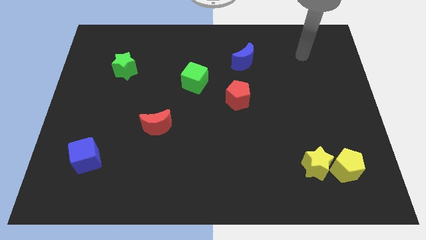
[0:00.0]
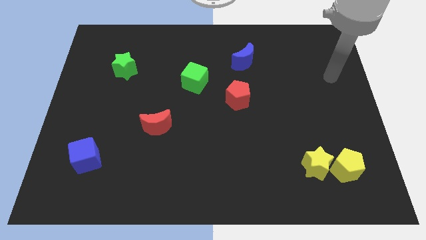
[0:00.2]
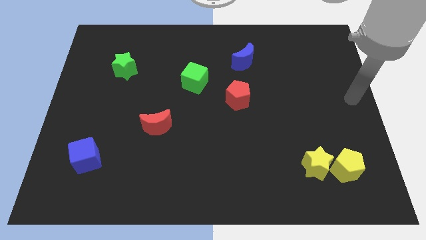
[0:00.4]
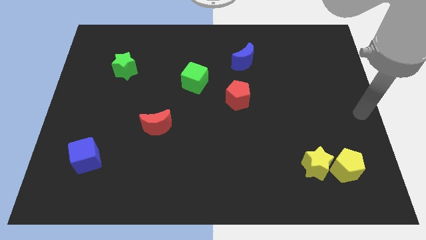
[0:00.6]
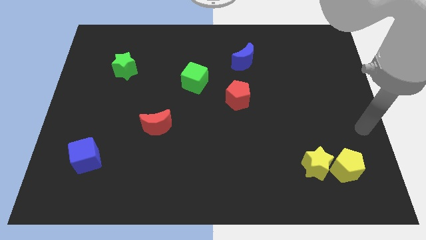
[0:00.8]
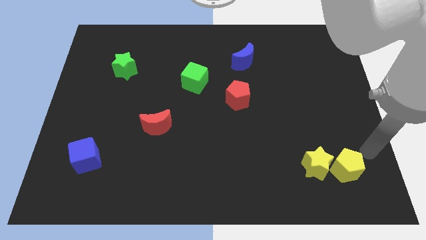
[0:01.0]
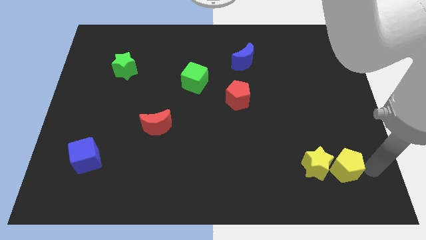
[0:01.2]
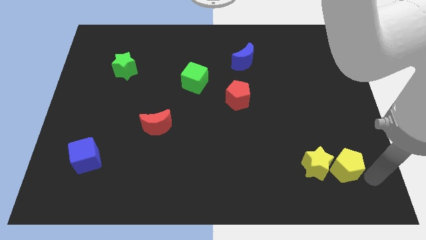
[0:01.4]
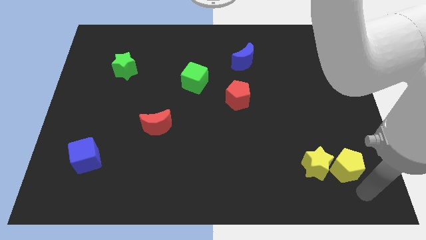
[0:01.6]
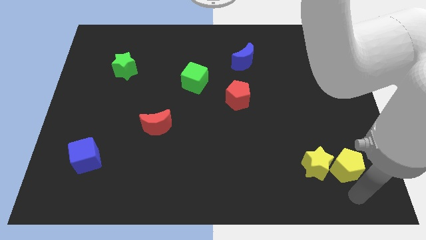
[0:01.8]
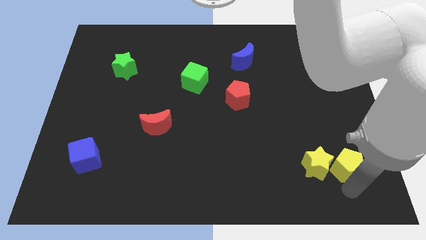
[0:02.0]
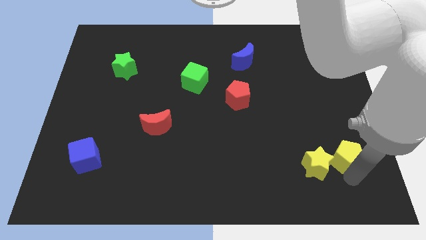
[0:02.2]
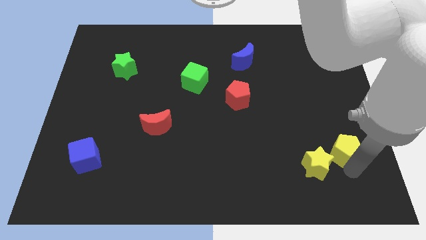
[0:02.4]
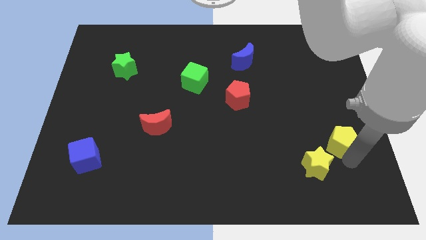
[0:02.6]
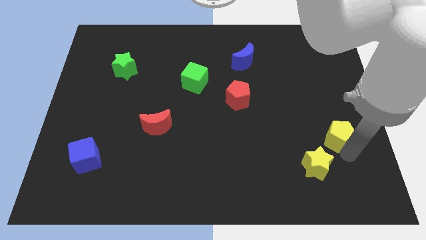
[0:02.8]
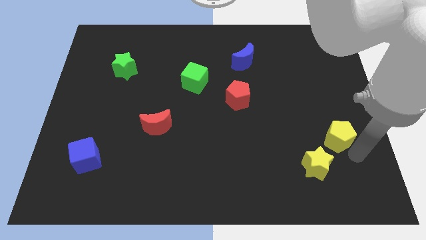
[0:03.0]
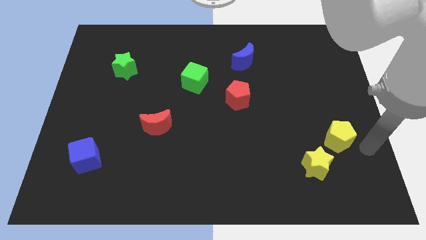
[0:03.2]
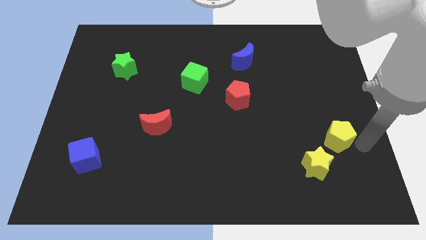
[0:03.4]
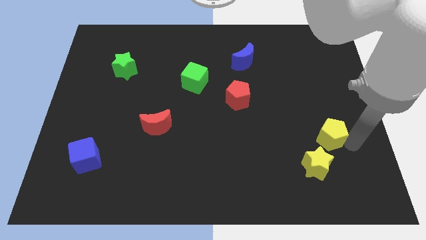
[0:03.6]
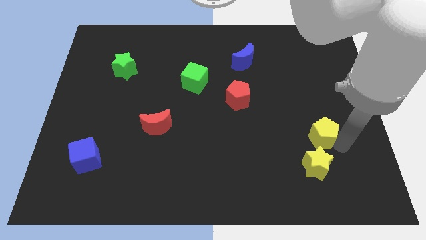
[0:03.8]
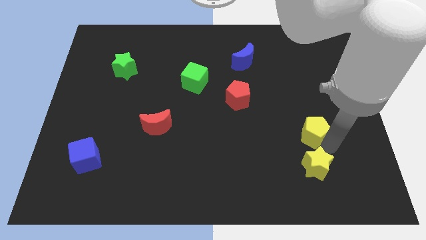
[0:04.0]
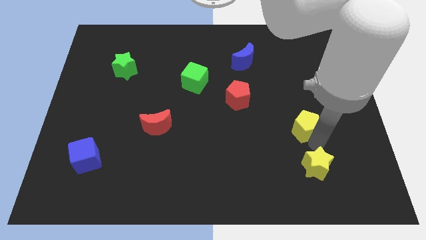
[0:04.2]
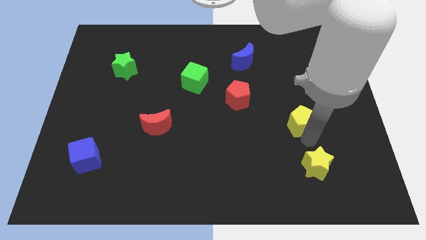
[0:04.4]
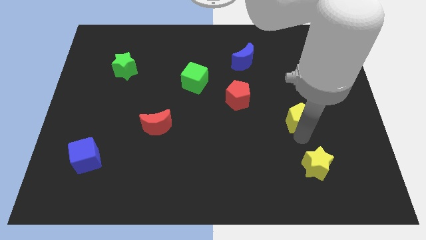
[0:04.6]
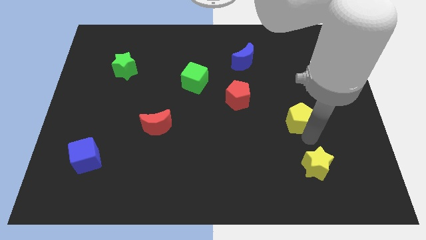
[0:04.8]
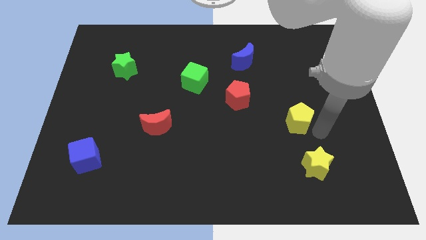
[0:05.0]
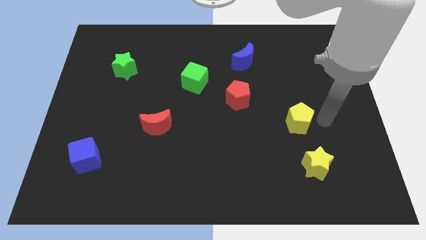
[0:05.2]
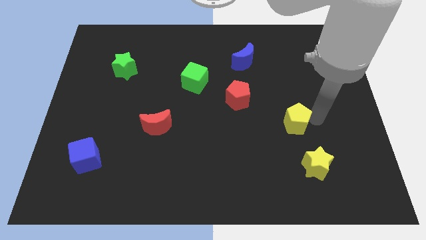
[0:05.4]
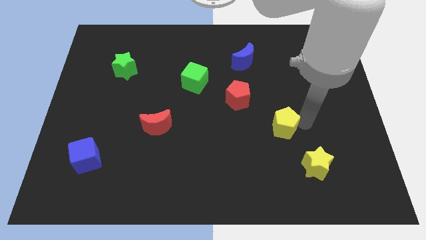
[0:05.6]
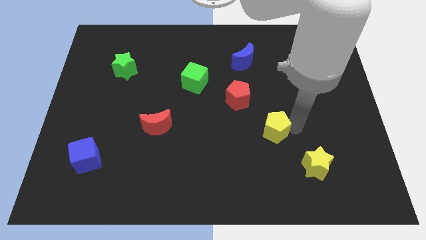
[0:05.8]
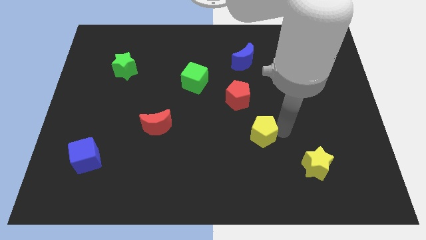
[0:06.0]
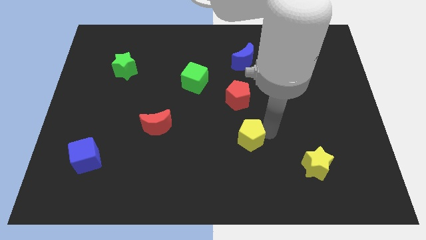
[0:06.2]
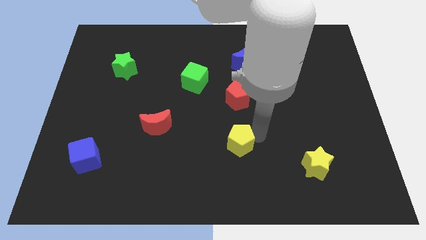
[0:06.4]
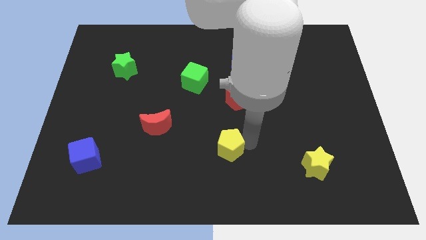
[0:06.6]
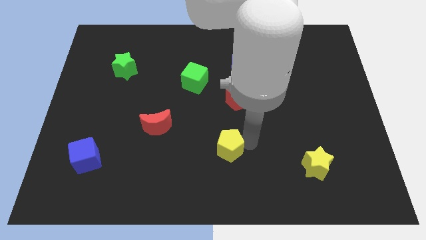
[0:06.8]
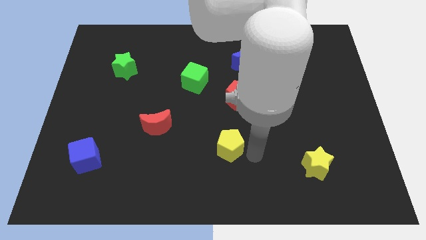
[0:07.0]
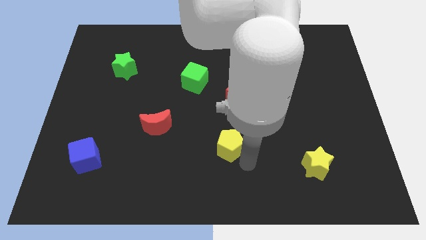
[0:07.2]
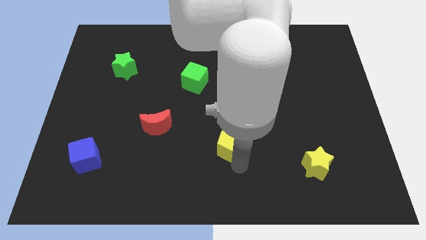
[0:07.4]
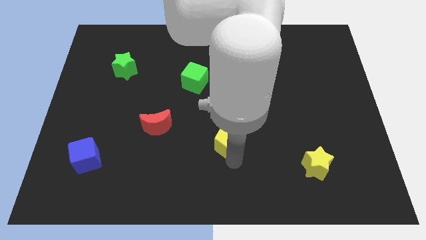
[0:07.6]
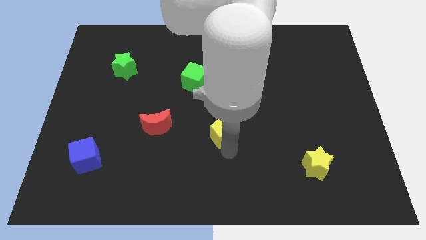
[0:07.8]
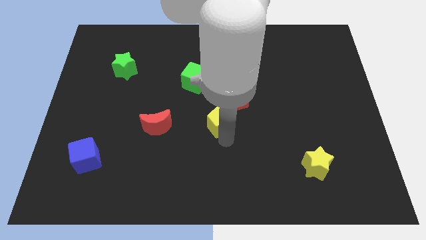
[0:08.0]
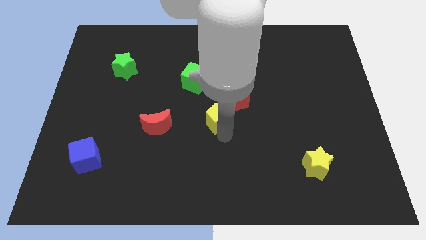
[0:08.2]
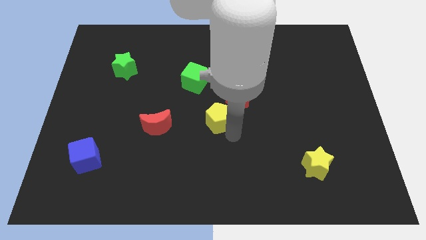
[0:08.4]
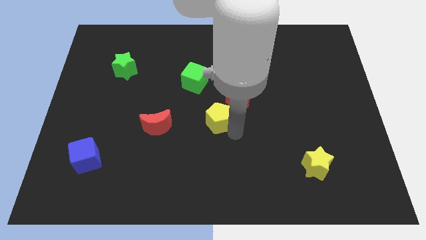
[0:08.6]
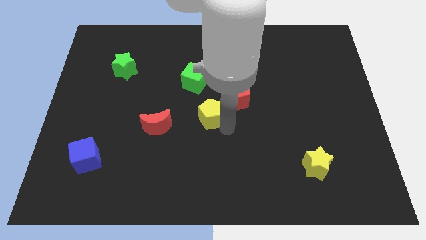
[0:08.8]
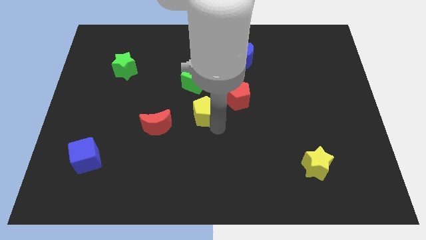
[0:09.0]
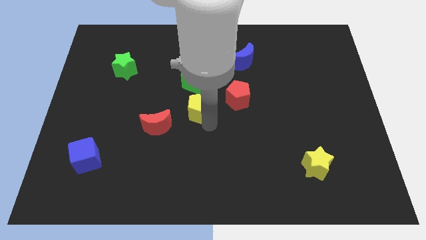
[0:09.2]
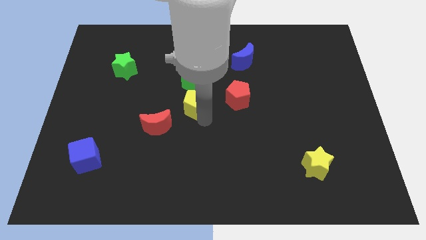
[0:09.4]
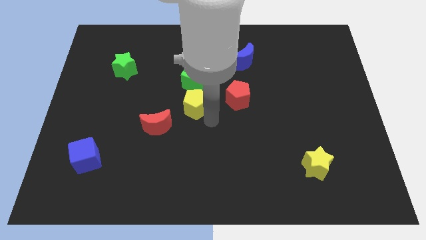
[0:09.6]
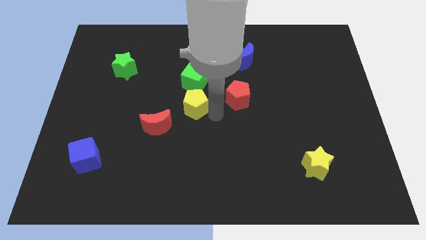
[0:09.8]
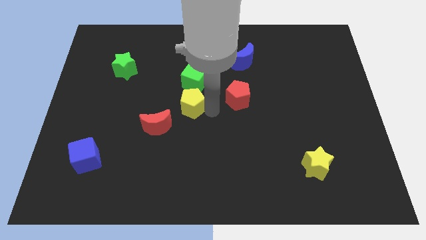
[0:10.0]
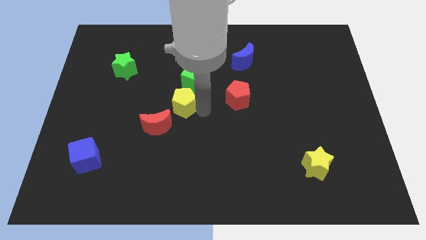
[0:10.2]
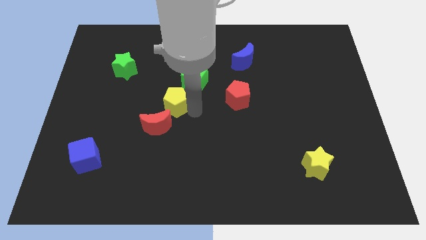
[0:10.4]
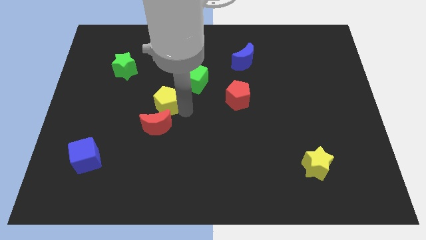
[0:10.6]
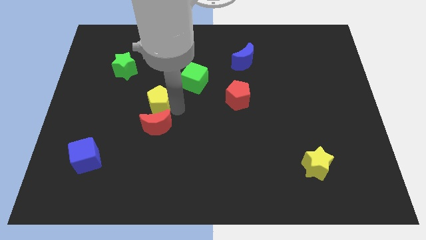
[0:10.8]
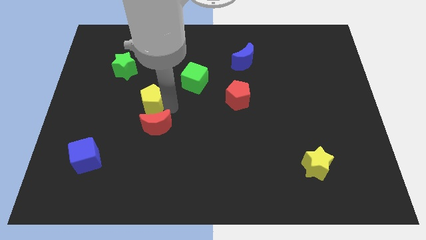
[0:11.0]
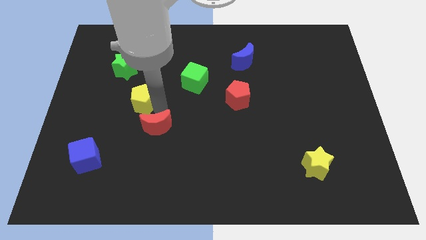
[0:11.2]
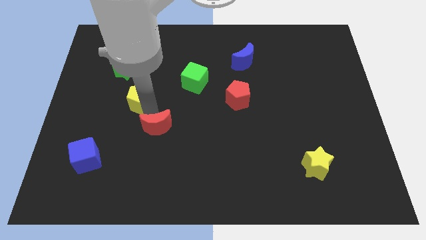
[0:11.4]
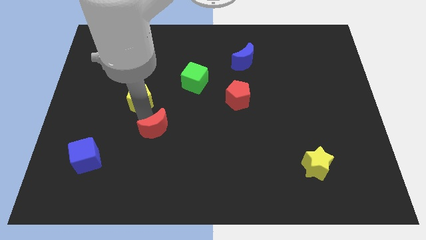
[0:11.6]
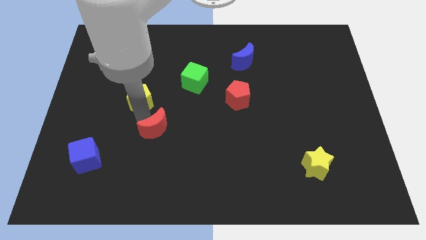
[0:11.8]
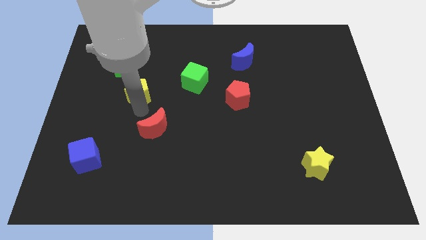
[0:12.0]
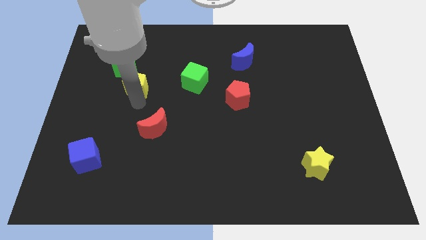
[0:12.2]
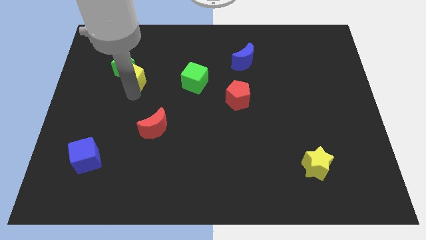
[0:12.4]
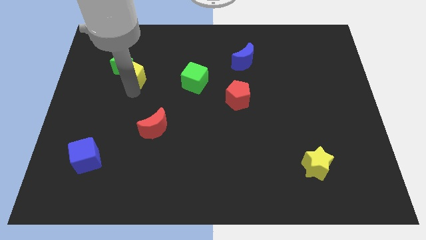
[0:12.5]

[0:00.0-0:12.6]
push the yellow pentagon next to the green star

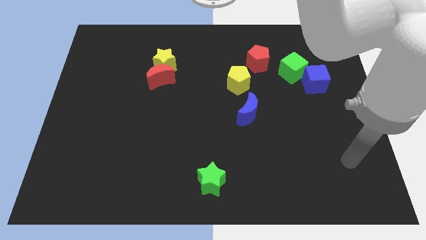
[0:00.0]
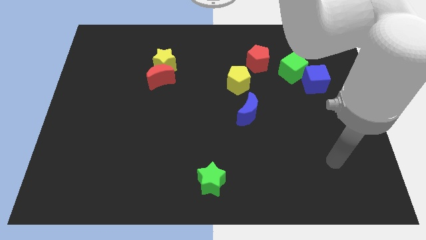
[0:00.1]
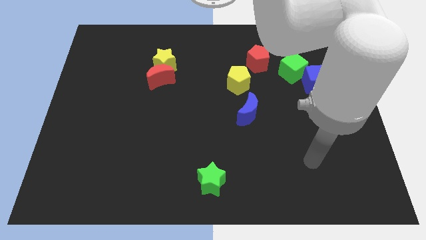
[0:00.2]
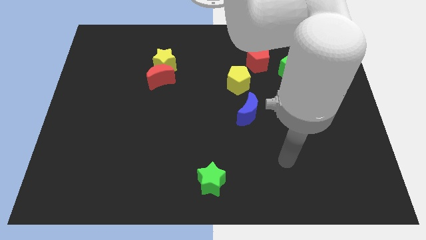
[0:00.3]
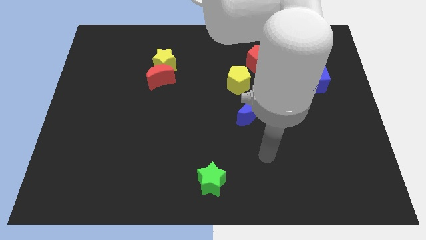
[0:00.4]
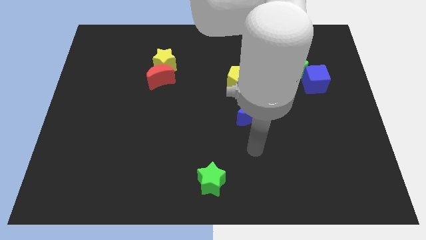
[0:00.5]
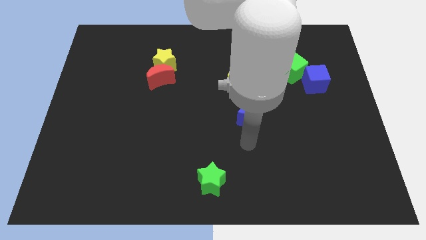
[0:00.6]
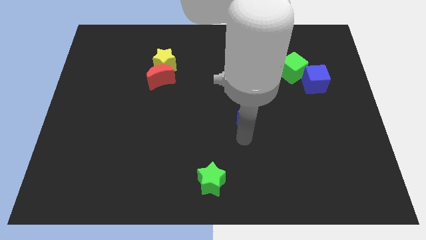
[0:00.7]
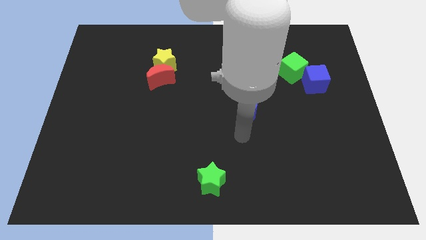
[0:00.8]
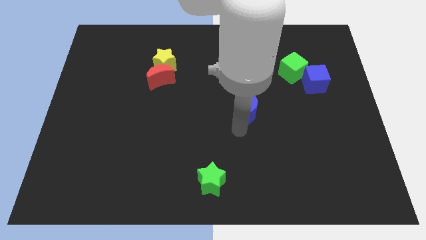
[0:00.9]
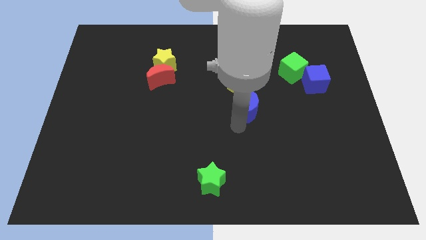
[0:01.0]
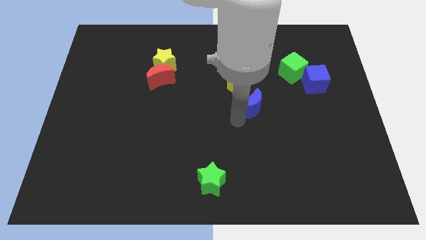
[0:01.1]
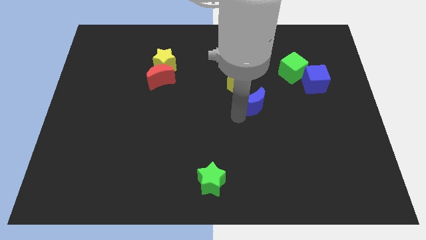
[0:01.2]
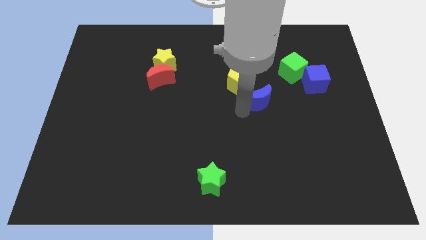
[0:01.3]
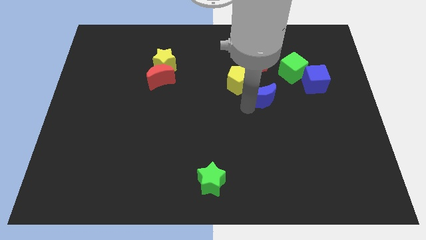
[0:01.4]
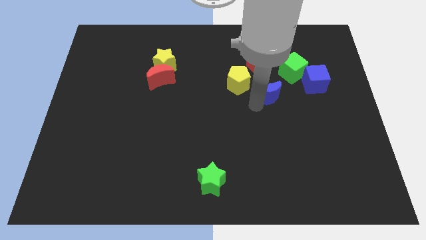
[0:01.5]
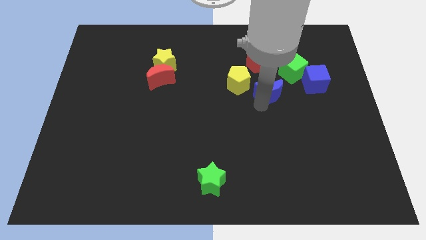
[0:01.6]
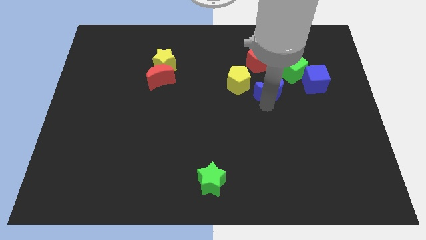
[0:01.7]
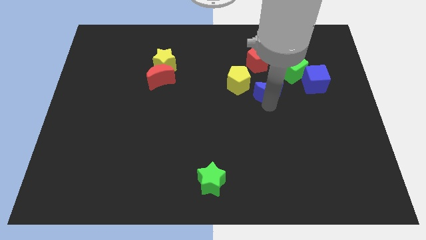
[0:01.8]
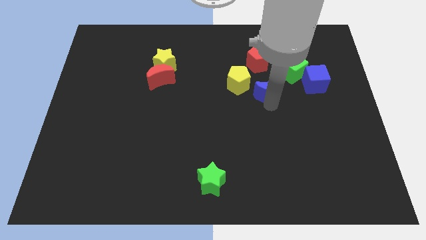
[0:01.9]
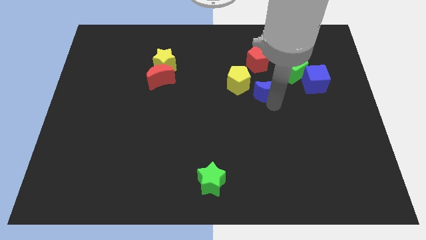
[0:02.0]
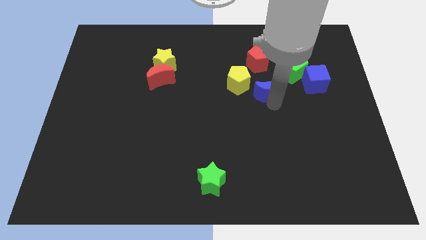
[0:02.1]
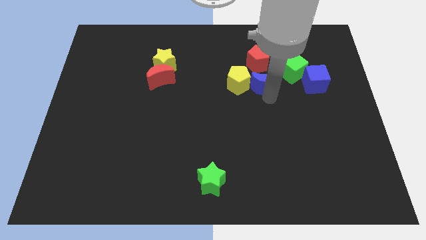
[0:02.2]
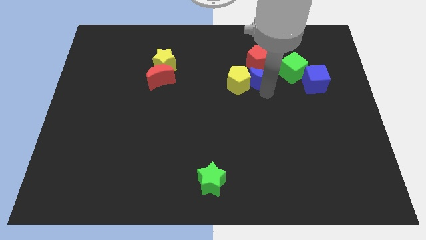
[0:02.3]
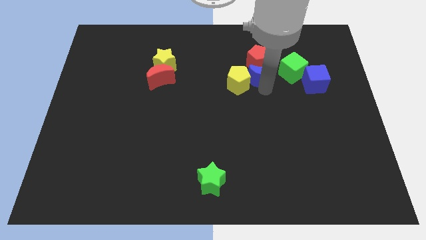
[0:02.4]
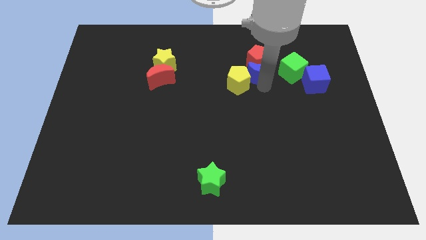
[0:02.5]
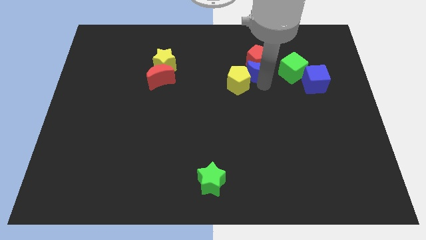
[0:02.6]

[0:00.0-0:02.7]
push the blue moon towards the red pentagon
